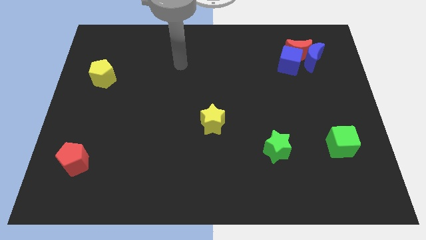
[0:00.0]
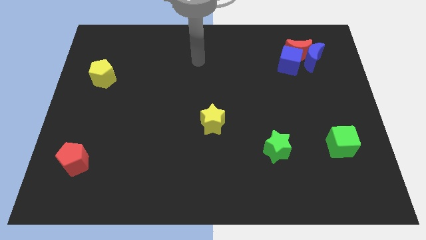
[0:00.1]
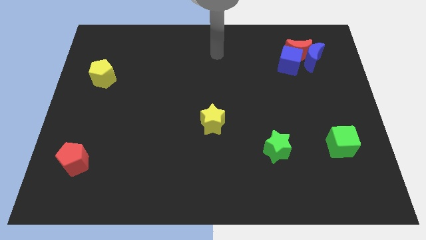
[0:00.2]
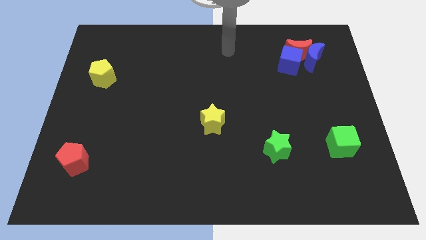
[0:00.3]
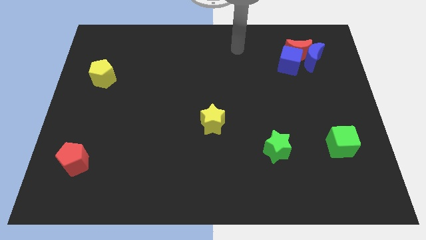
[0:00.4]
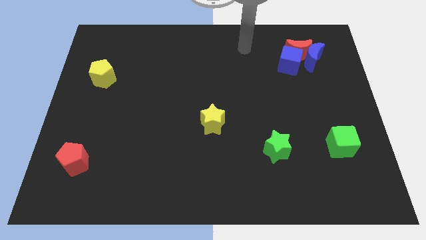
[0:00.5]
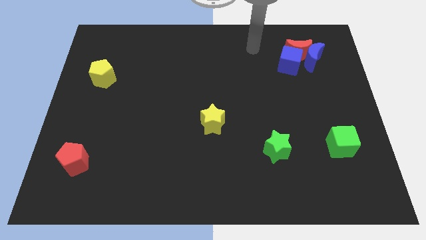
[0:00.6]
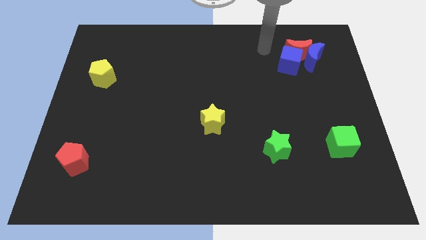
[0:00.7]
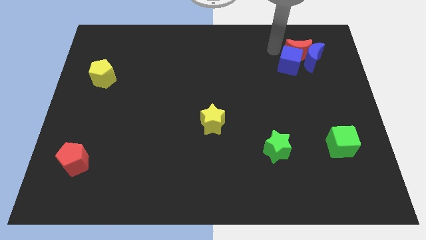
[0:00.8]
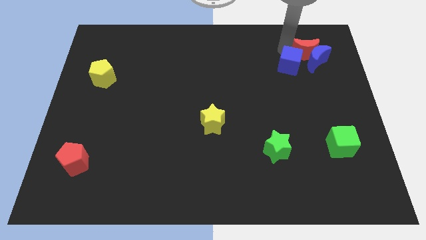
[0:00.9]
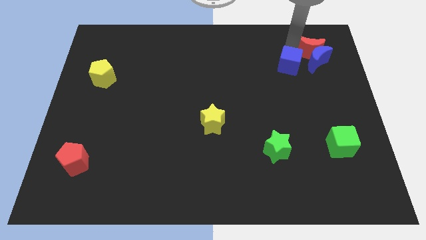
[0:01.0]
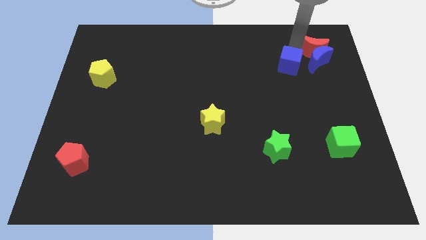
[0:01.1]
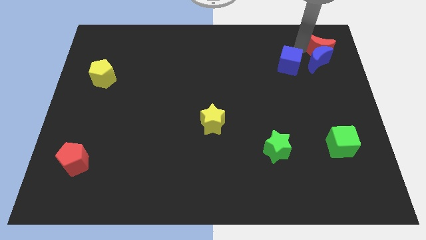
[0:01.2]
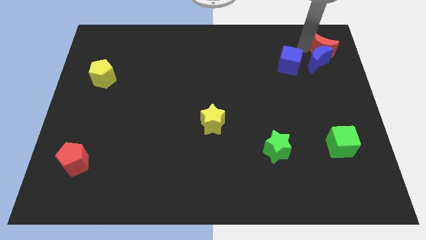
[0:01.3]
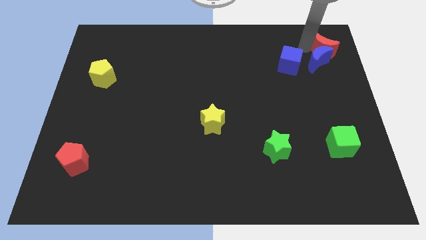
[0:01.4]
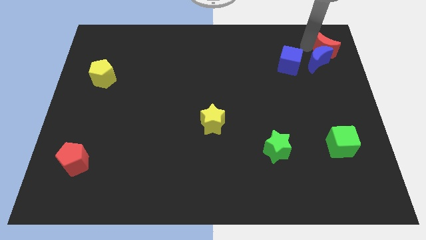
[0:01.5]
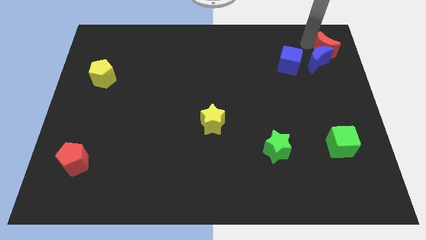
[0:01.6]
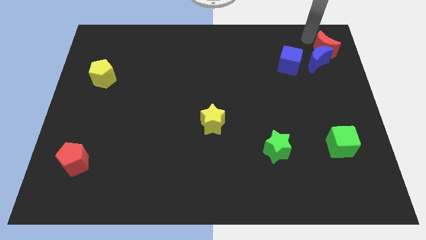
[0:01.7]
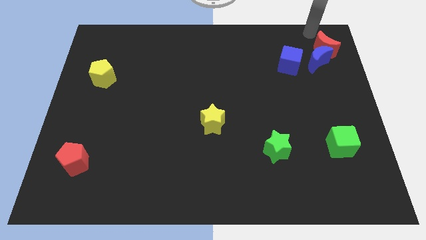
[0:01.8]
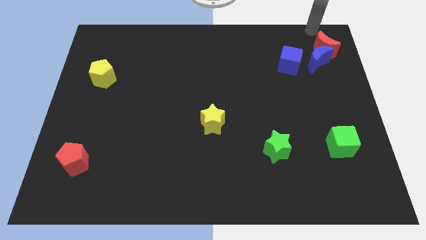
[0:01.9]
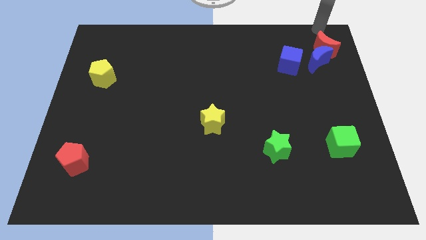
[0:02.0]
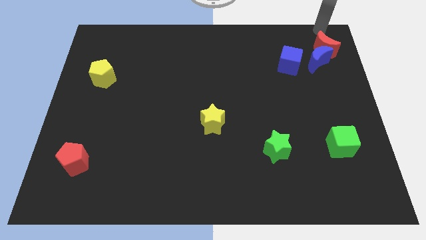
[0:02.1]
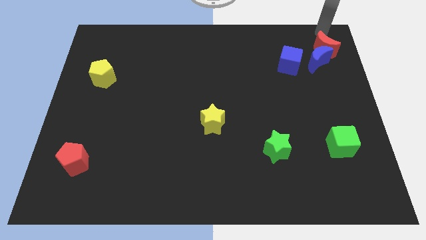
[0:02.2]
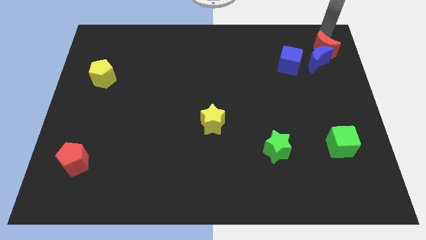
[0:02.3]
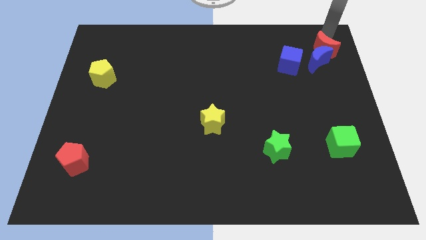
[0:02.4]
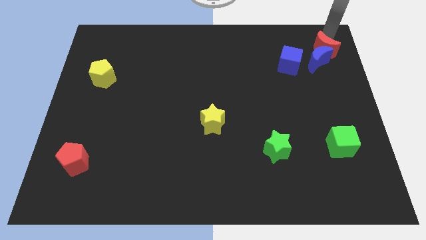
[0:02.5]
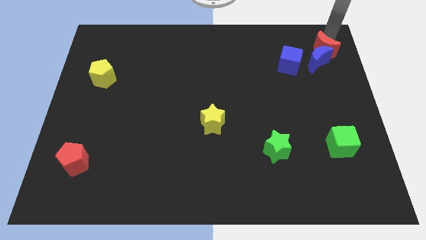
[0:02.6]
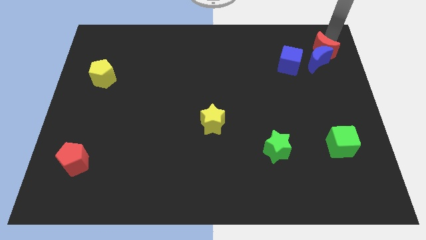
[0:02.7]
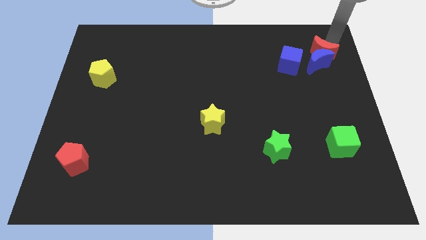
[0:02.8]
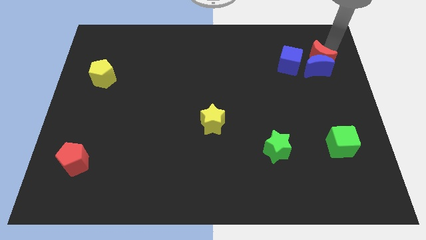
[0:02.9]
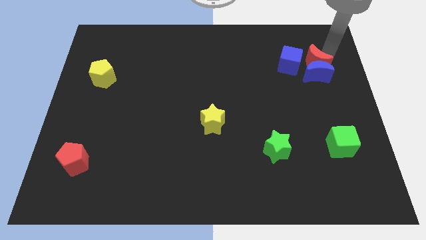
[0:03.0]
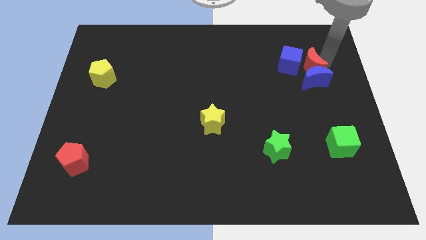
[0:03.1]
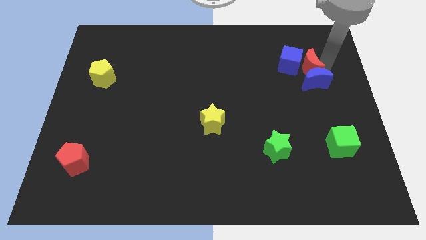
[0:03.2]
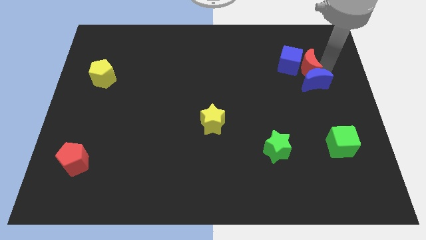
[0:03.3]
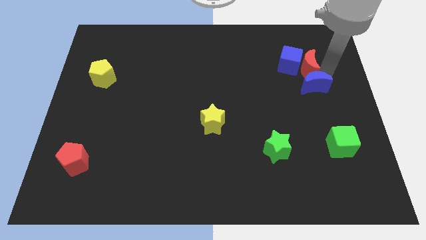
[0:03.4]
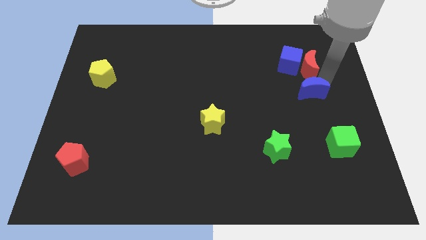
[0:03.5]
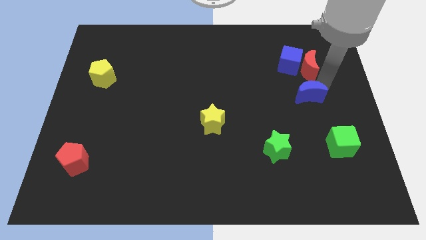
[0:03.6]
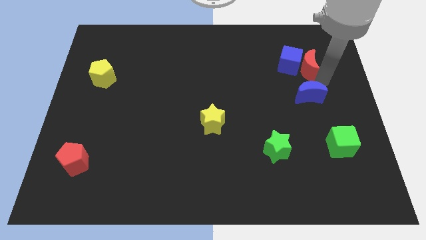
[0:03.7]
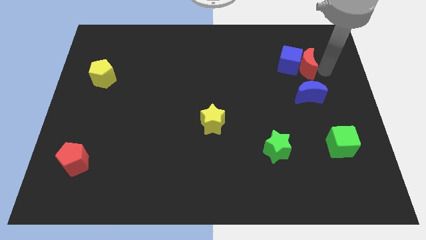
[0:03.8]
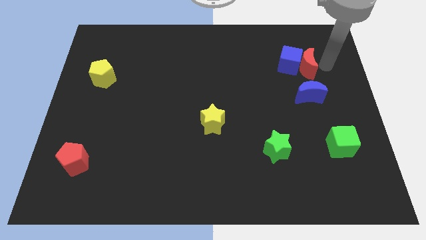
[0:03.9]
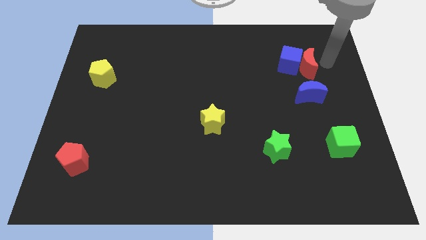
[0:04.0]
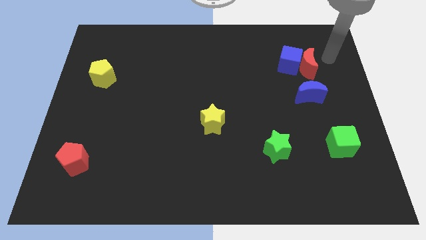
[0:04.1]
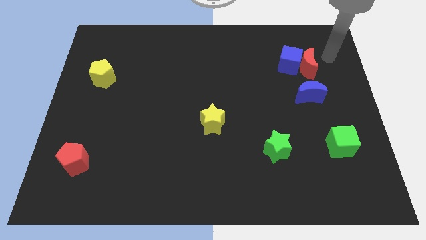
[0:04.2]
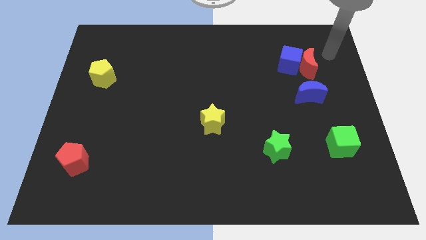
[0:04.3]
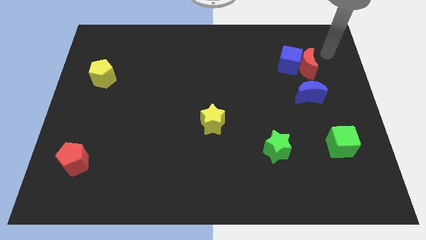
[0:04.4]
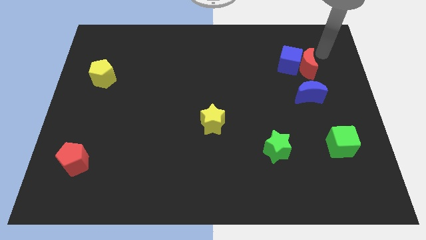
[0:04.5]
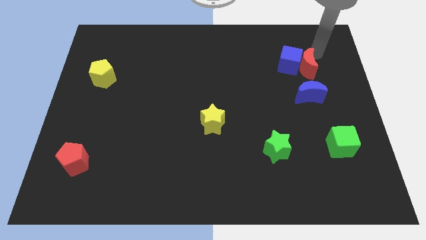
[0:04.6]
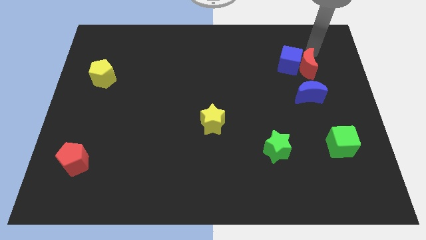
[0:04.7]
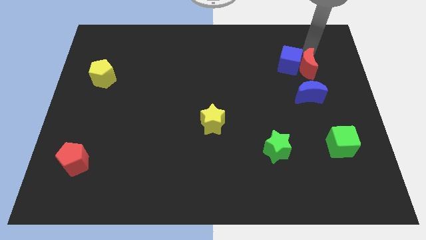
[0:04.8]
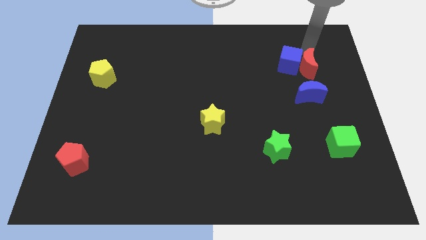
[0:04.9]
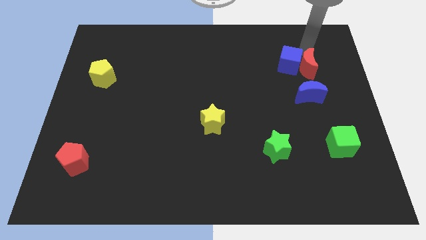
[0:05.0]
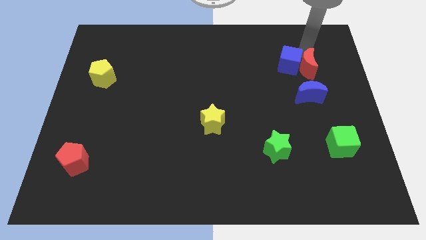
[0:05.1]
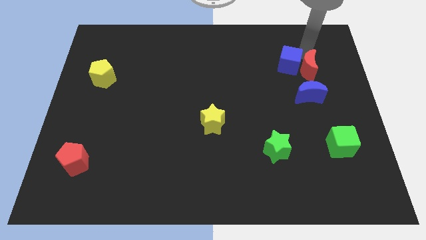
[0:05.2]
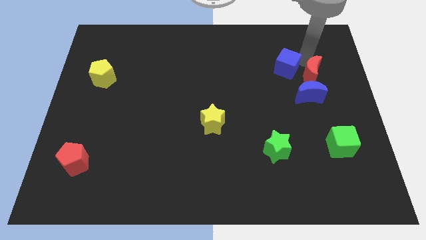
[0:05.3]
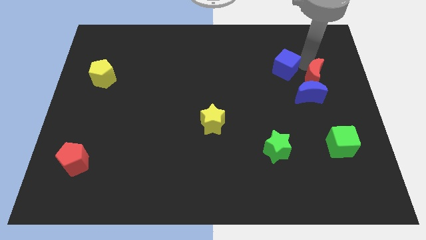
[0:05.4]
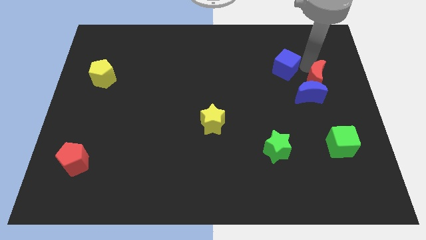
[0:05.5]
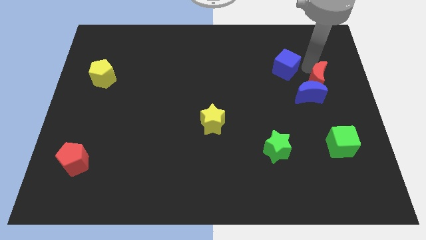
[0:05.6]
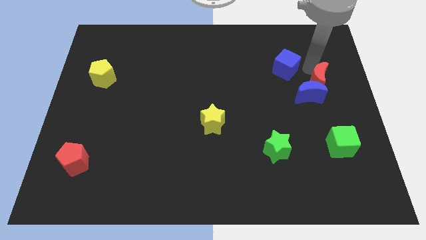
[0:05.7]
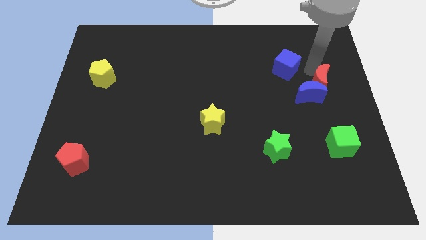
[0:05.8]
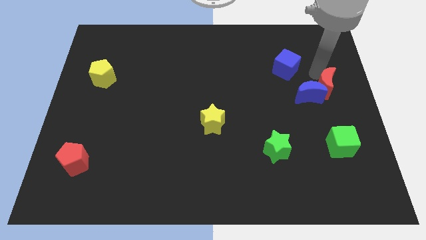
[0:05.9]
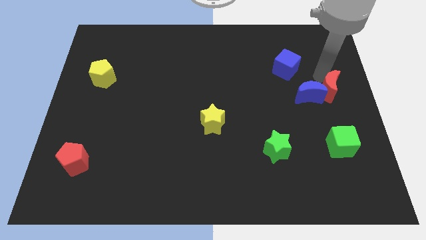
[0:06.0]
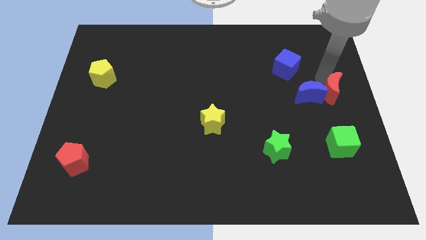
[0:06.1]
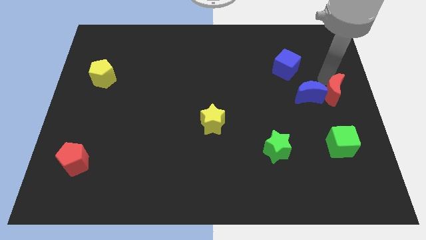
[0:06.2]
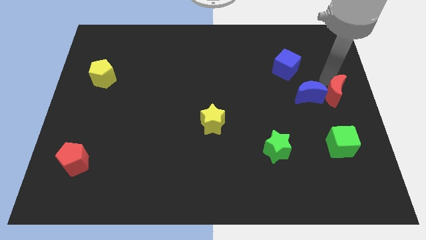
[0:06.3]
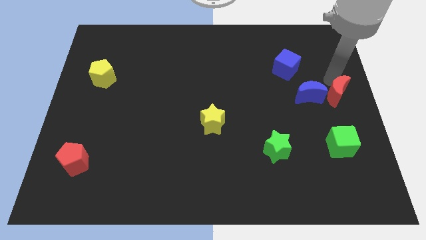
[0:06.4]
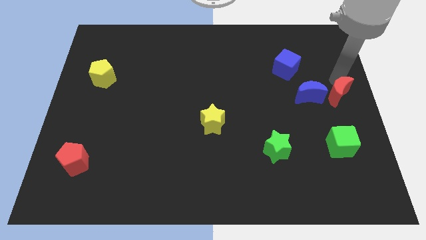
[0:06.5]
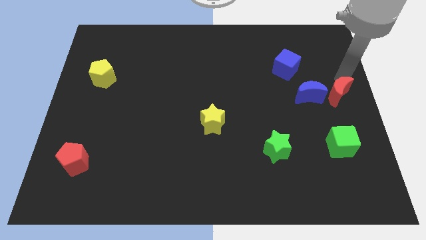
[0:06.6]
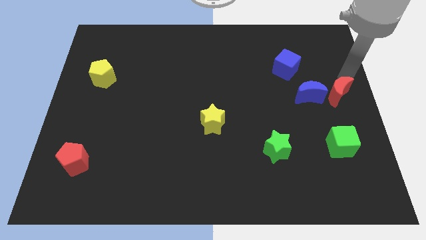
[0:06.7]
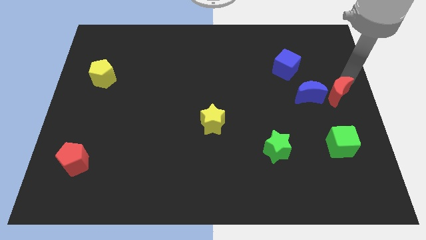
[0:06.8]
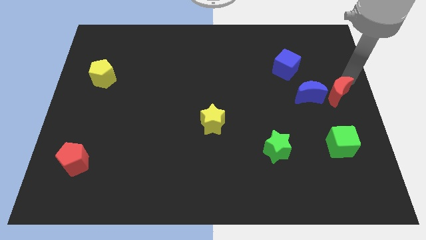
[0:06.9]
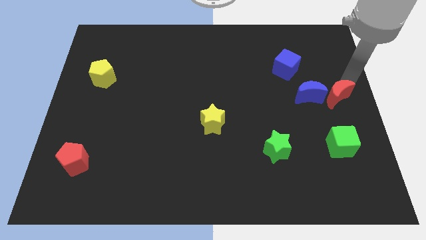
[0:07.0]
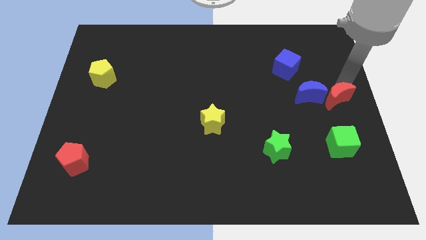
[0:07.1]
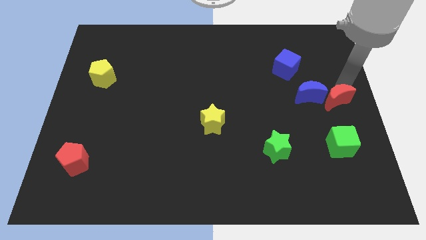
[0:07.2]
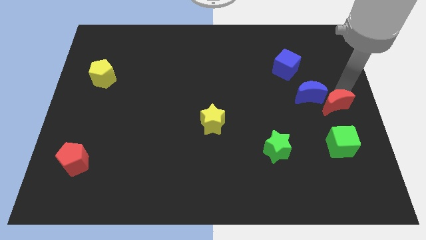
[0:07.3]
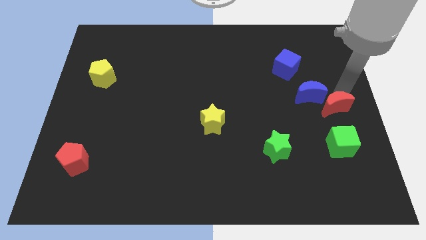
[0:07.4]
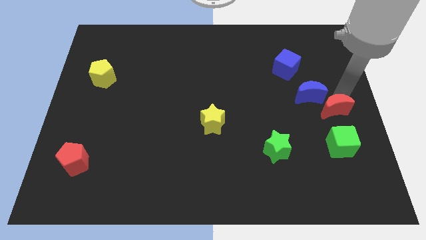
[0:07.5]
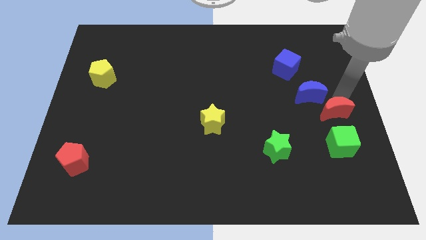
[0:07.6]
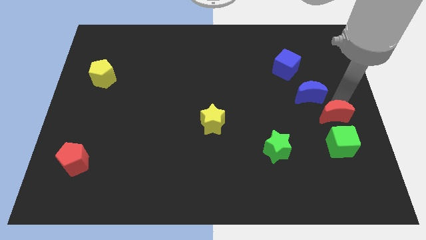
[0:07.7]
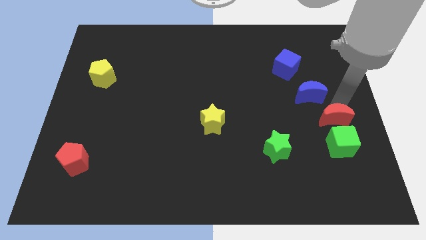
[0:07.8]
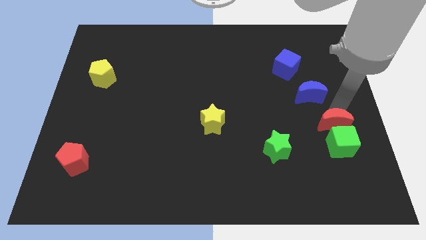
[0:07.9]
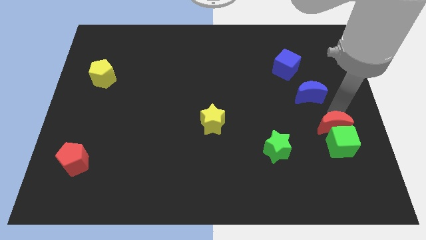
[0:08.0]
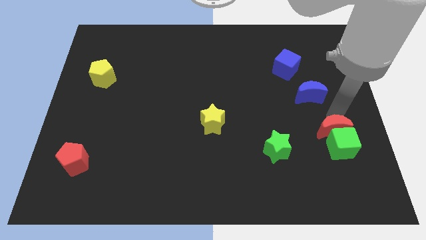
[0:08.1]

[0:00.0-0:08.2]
put the red moon to the green cube

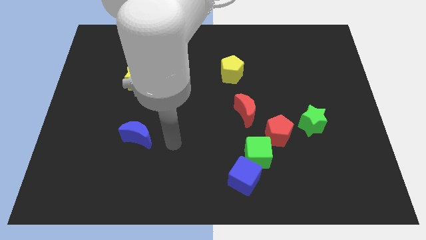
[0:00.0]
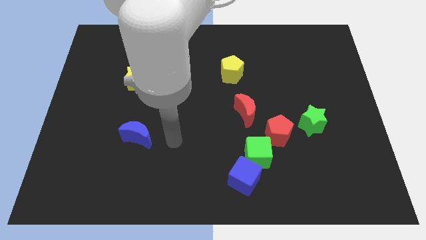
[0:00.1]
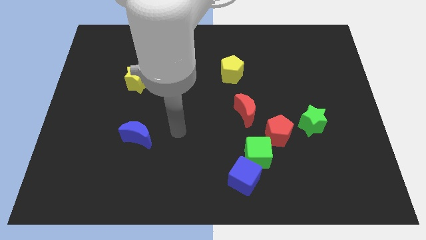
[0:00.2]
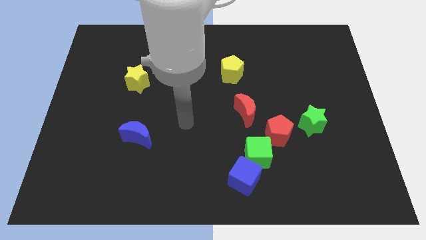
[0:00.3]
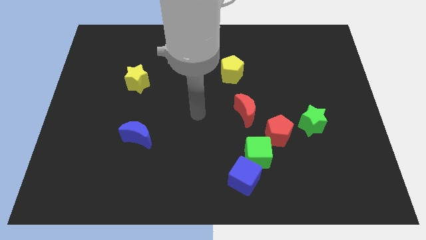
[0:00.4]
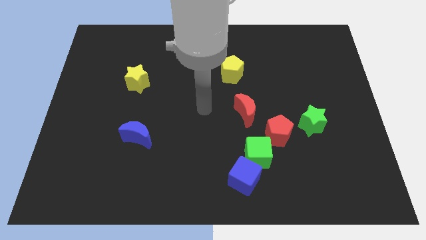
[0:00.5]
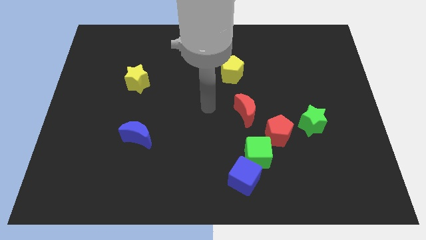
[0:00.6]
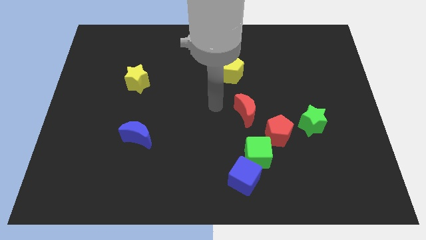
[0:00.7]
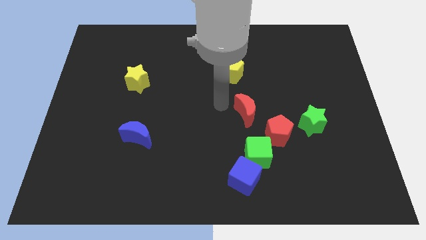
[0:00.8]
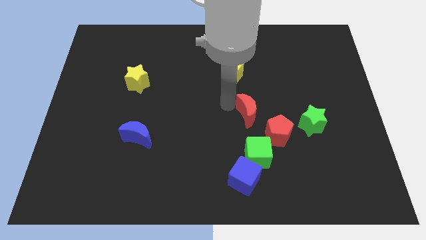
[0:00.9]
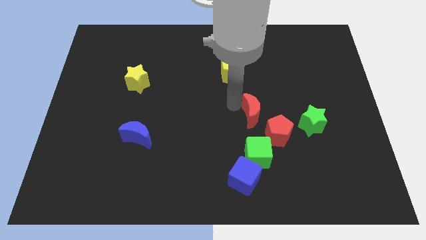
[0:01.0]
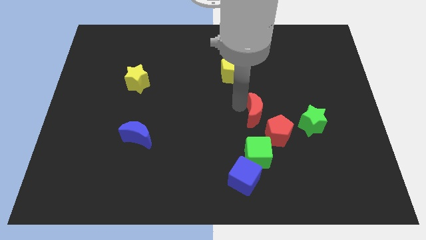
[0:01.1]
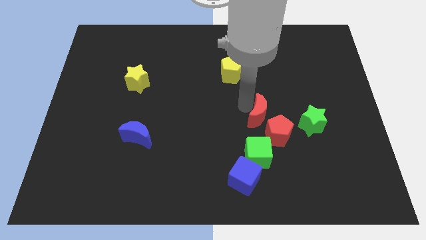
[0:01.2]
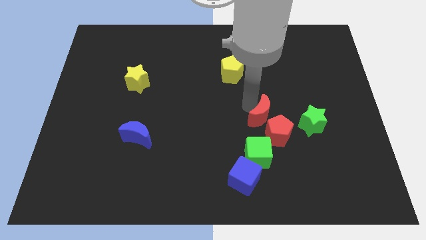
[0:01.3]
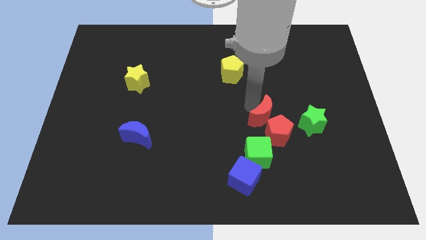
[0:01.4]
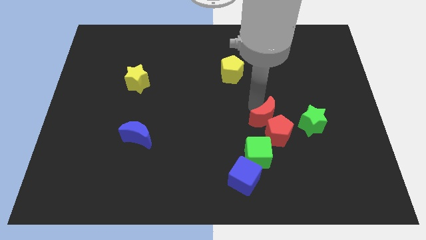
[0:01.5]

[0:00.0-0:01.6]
put the red moon close to the red pentagon
